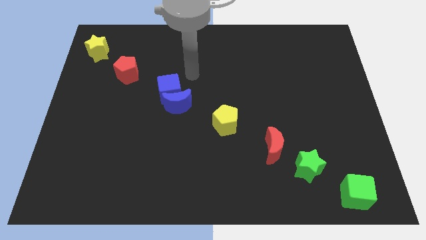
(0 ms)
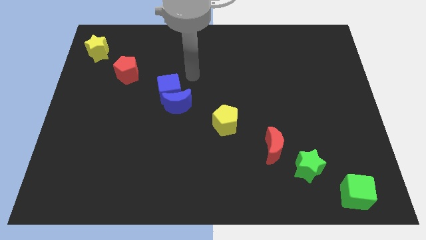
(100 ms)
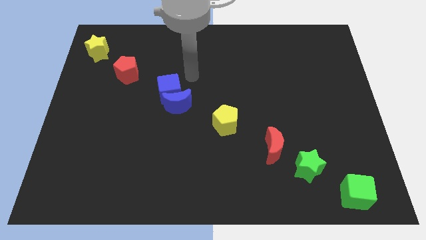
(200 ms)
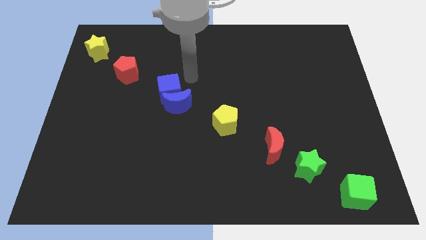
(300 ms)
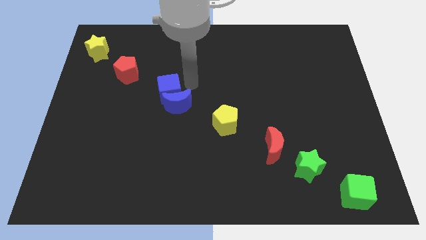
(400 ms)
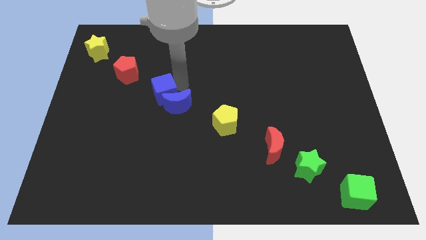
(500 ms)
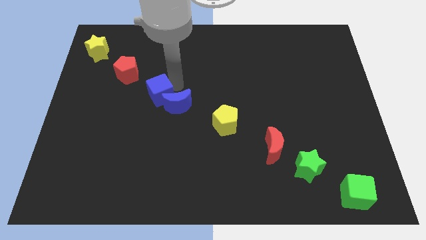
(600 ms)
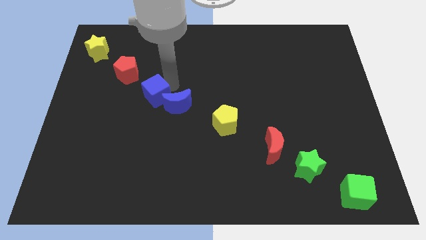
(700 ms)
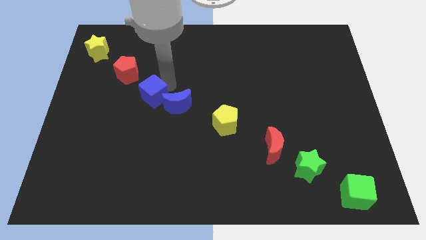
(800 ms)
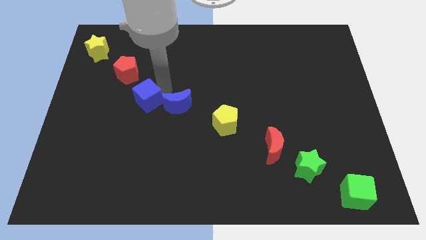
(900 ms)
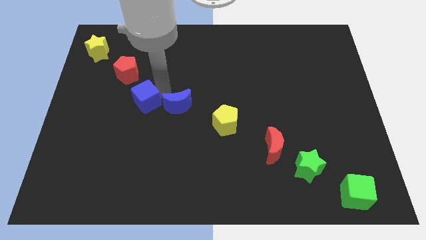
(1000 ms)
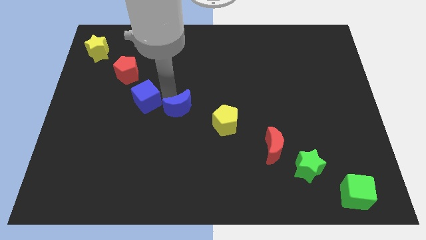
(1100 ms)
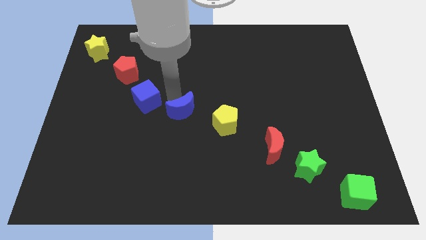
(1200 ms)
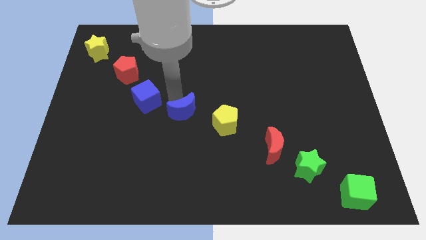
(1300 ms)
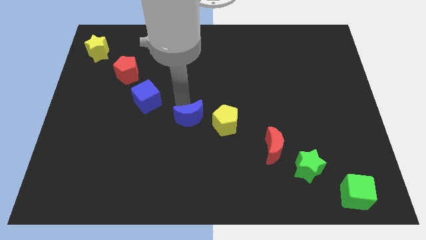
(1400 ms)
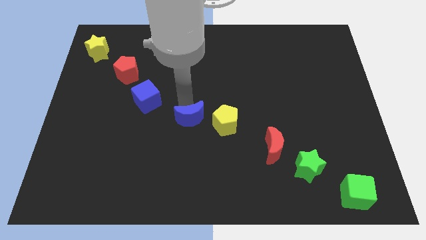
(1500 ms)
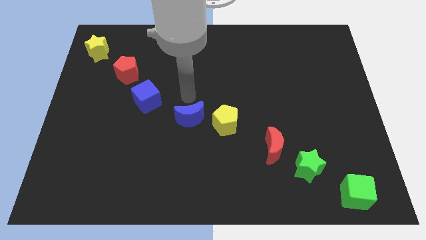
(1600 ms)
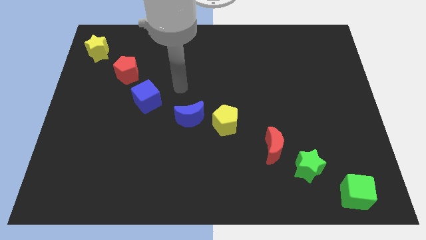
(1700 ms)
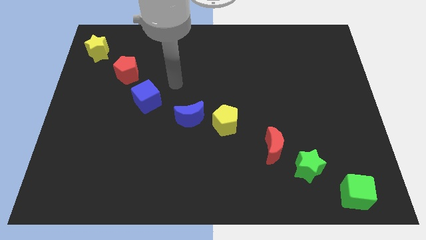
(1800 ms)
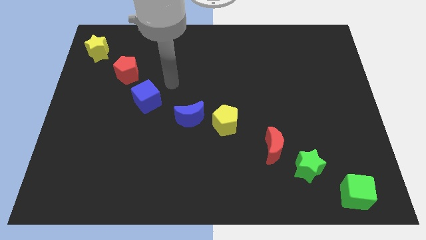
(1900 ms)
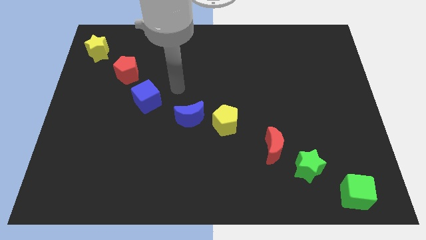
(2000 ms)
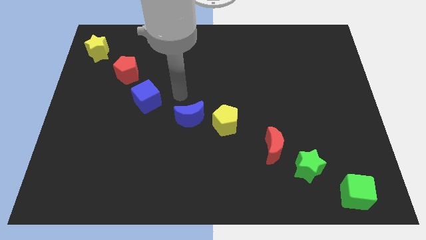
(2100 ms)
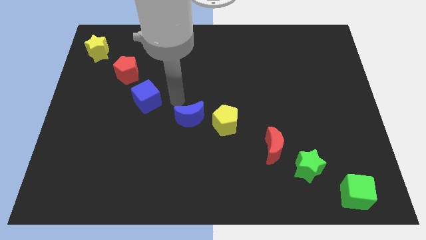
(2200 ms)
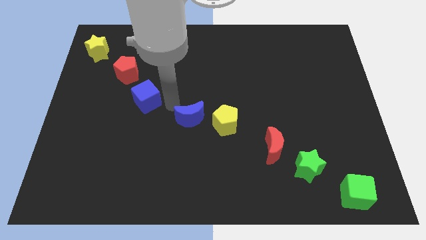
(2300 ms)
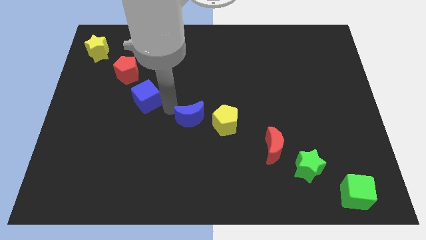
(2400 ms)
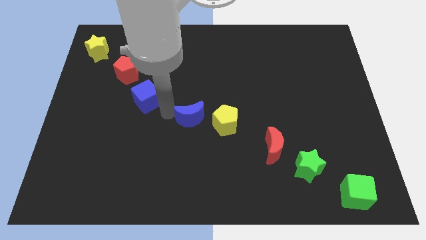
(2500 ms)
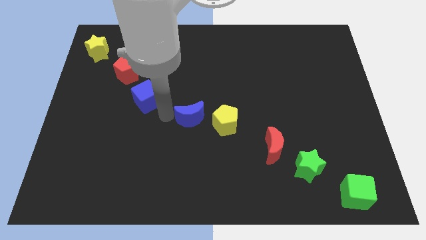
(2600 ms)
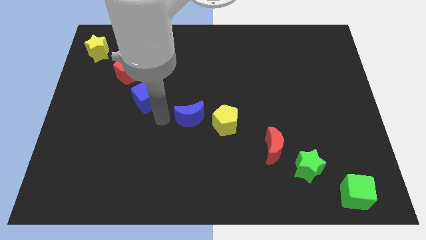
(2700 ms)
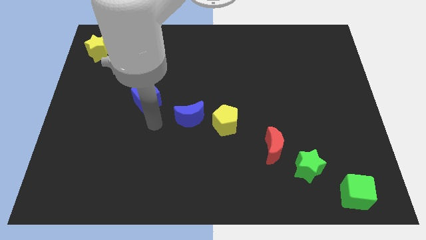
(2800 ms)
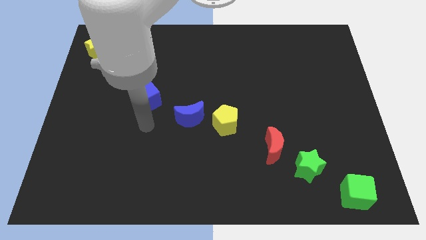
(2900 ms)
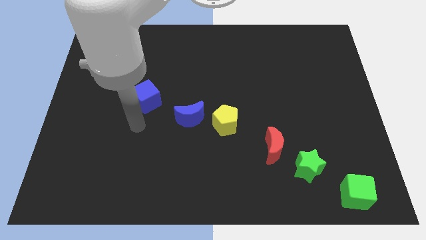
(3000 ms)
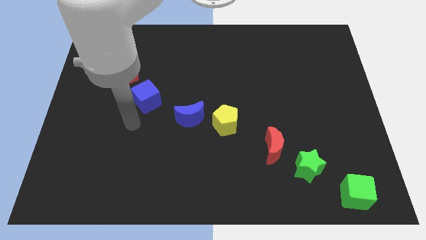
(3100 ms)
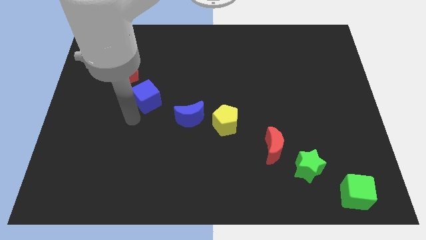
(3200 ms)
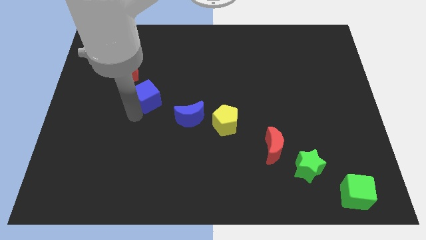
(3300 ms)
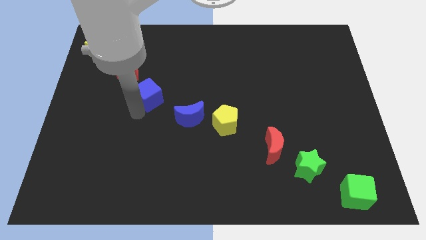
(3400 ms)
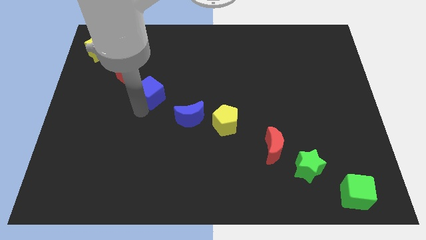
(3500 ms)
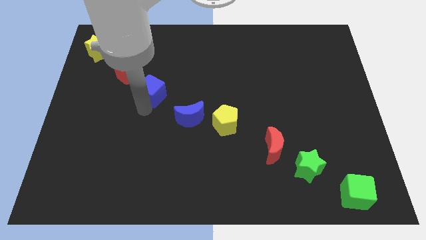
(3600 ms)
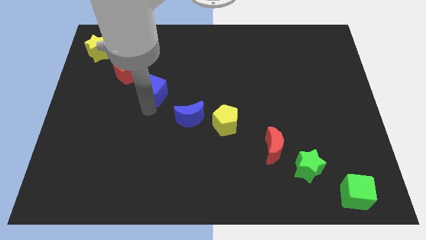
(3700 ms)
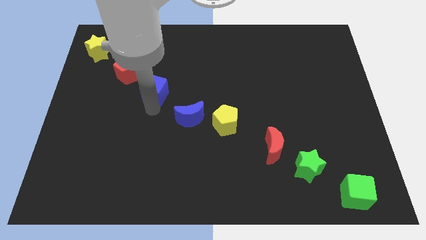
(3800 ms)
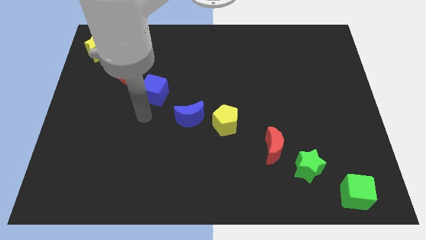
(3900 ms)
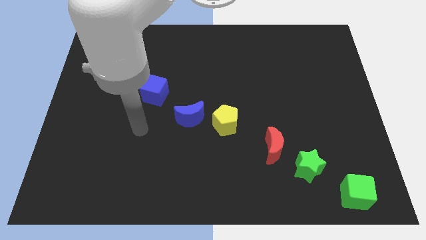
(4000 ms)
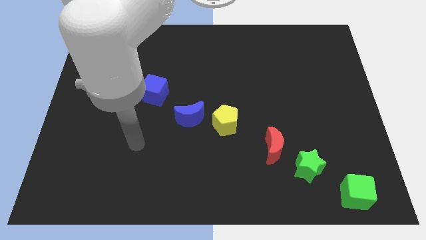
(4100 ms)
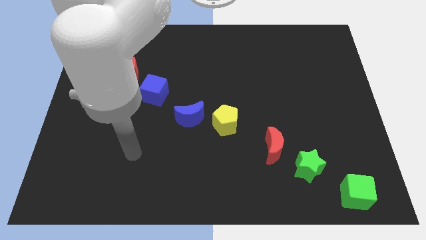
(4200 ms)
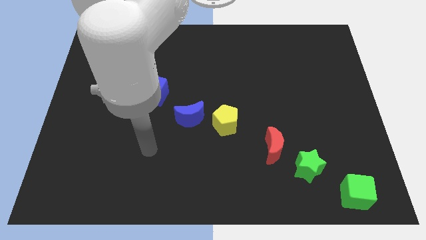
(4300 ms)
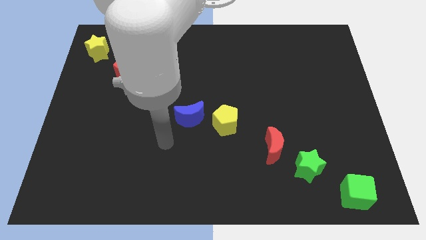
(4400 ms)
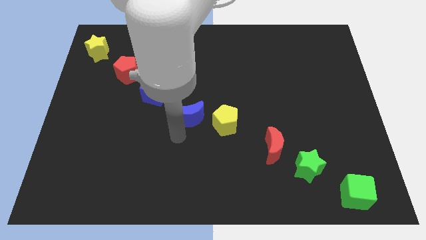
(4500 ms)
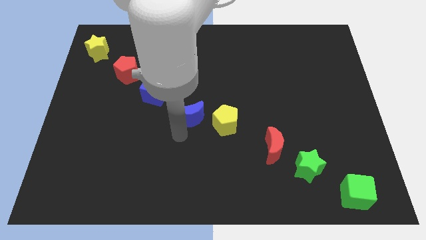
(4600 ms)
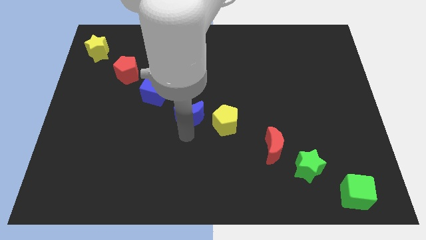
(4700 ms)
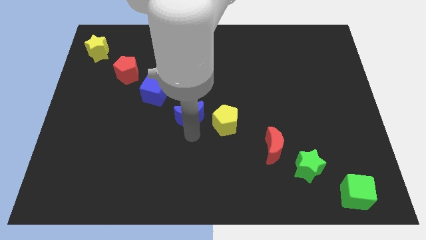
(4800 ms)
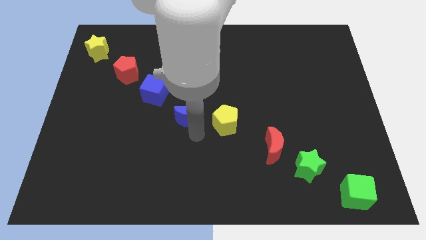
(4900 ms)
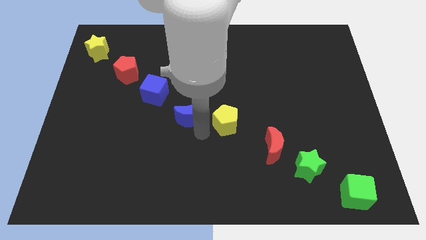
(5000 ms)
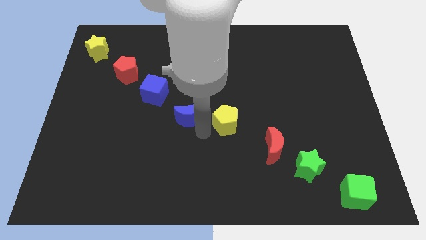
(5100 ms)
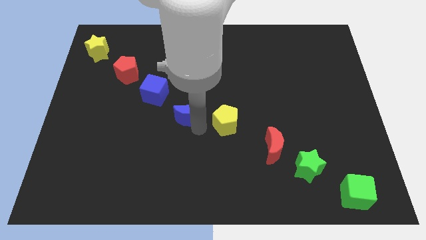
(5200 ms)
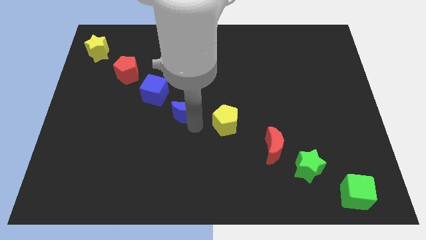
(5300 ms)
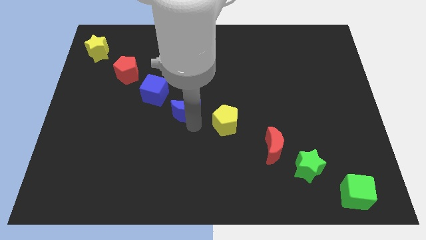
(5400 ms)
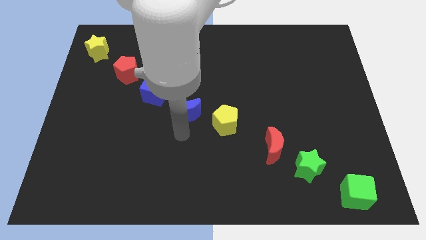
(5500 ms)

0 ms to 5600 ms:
place the blue moon beside the yellow pentagon to form a line

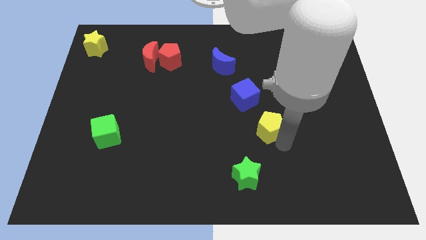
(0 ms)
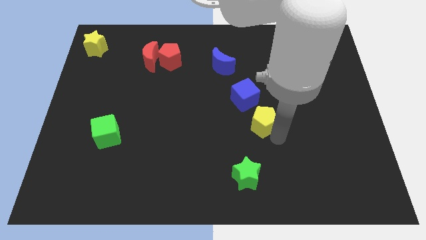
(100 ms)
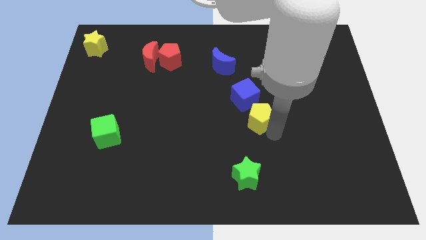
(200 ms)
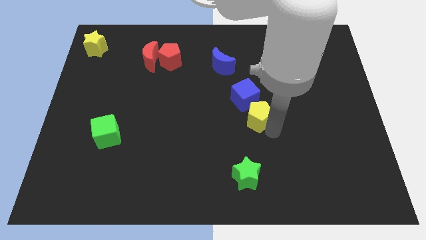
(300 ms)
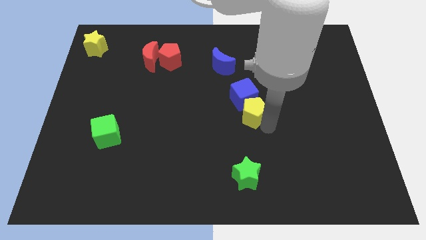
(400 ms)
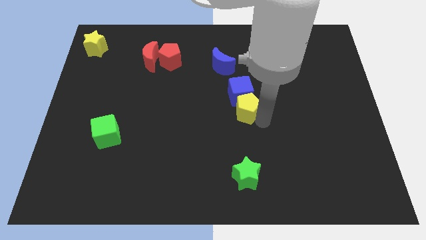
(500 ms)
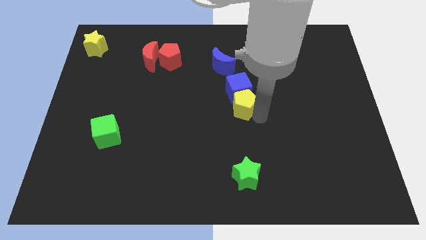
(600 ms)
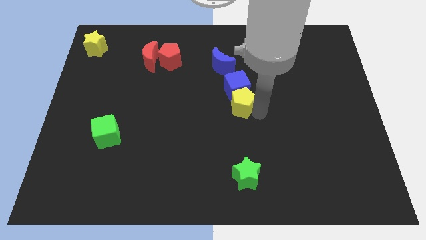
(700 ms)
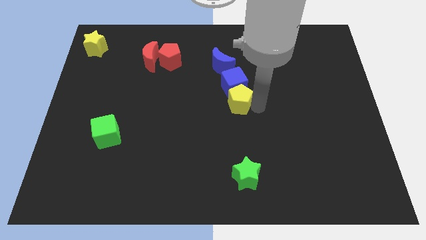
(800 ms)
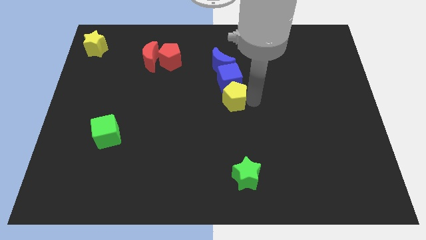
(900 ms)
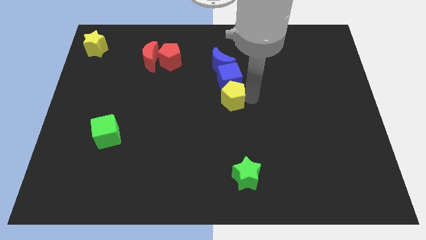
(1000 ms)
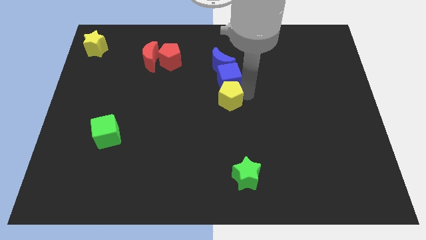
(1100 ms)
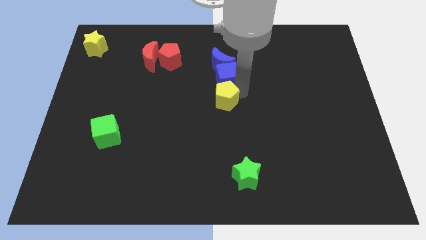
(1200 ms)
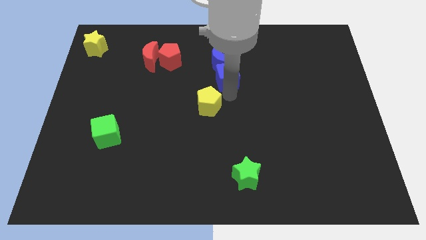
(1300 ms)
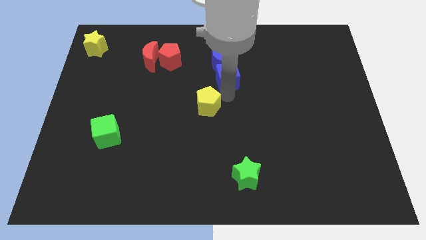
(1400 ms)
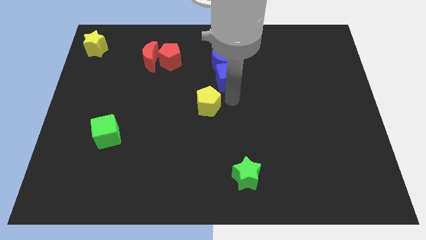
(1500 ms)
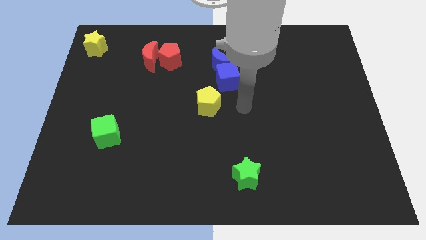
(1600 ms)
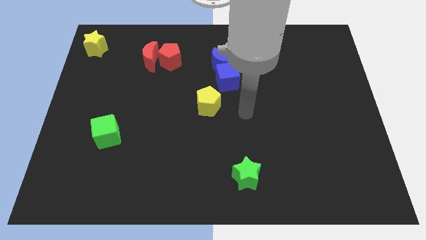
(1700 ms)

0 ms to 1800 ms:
place the yellow pentagon at the center of the board

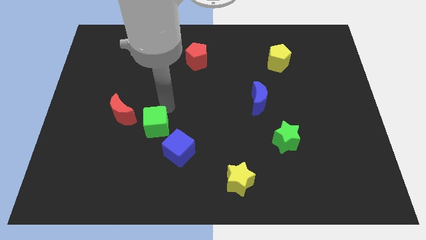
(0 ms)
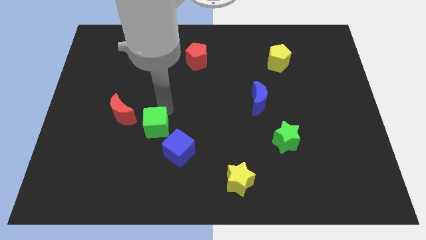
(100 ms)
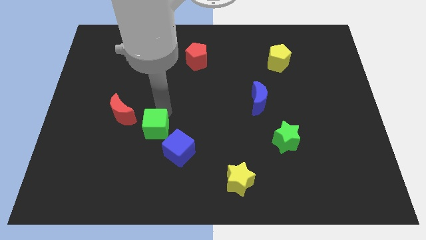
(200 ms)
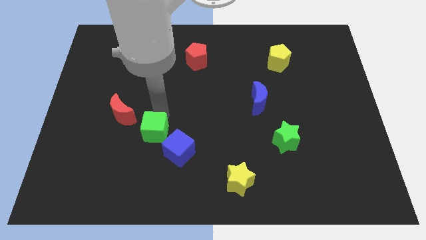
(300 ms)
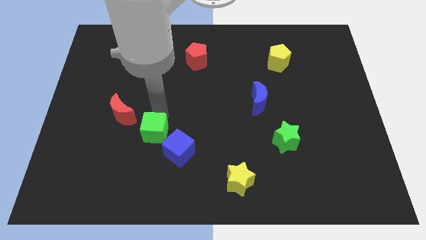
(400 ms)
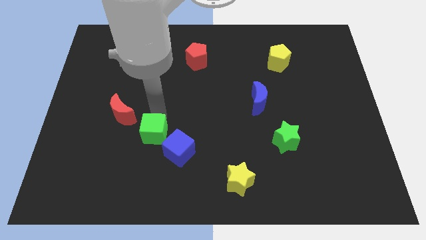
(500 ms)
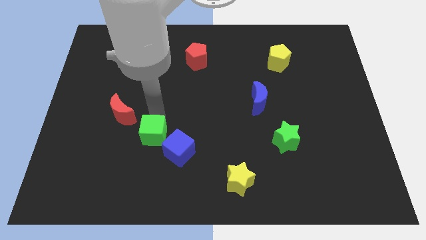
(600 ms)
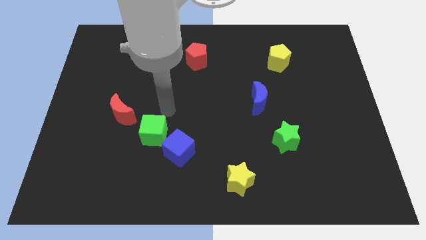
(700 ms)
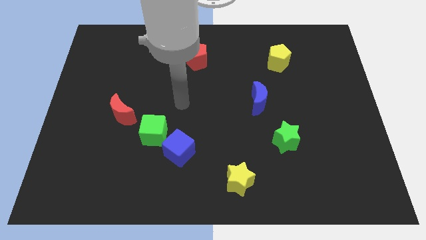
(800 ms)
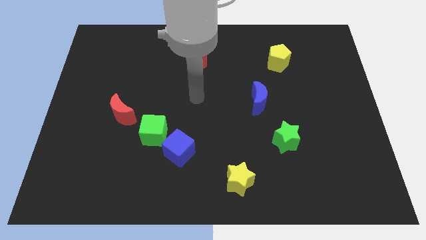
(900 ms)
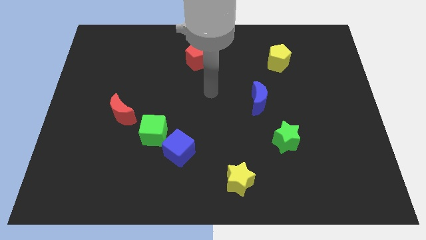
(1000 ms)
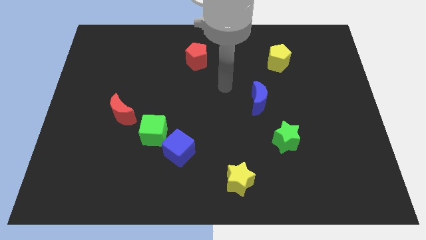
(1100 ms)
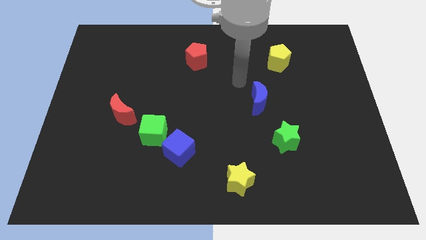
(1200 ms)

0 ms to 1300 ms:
slightly move the green cube downwards

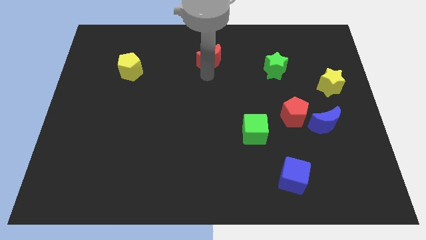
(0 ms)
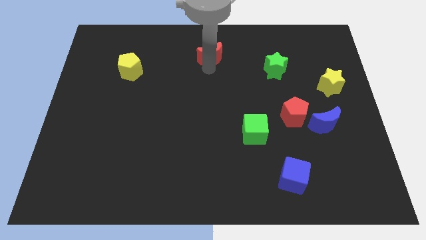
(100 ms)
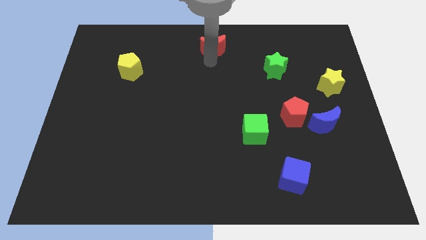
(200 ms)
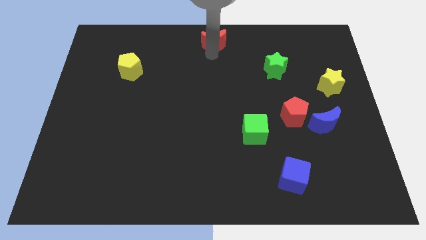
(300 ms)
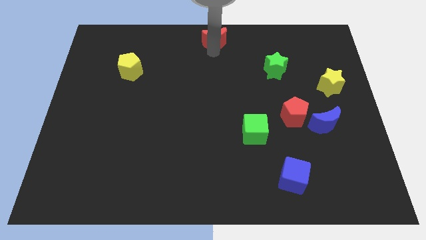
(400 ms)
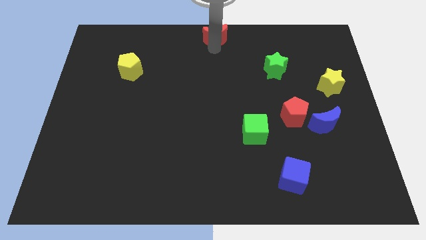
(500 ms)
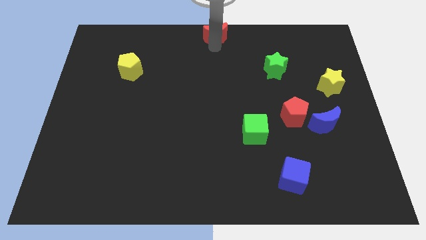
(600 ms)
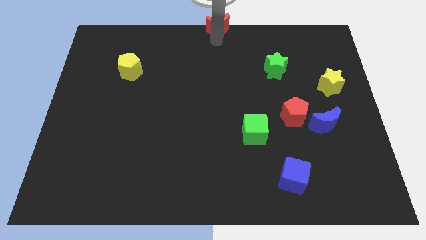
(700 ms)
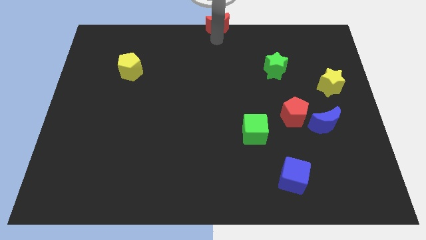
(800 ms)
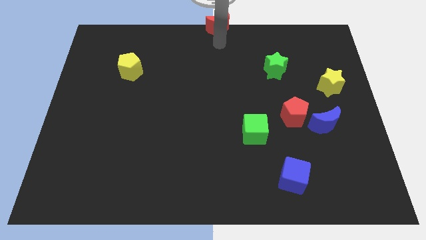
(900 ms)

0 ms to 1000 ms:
place the red crescent at the top center of the board
